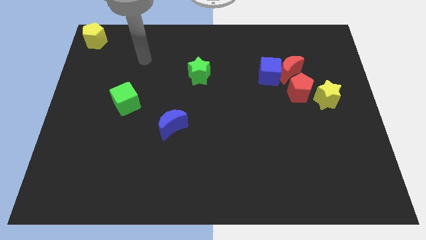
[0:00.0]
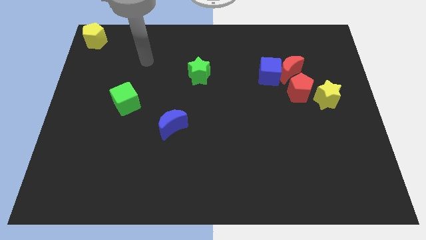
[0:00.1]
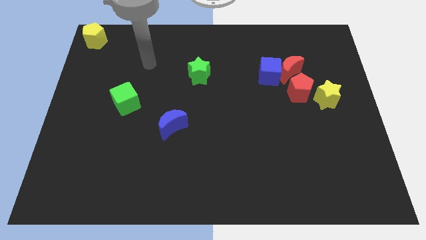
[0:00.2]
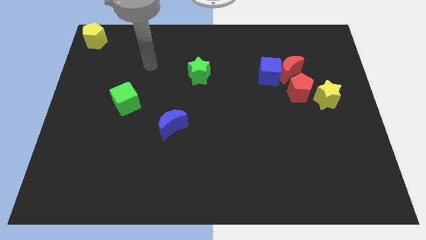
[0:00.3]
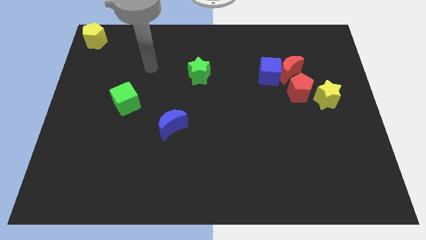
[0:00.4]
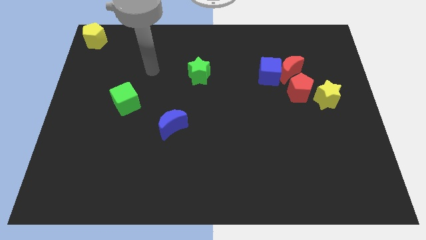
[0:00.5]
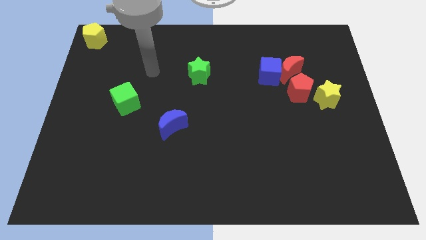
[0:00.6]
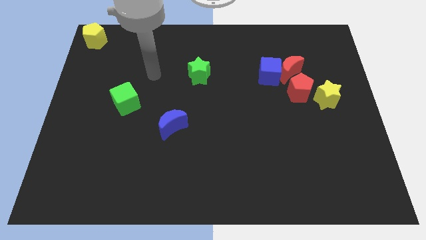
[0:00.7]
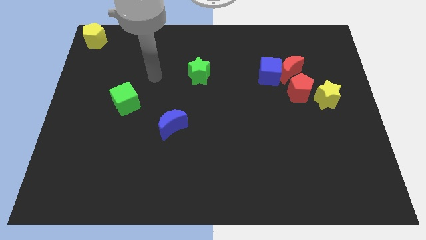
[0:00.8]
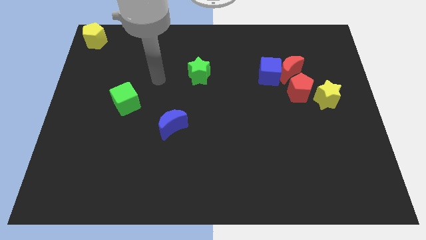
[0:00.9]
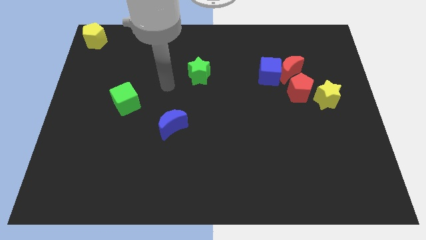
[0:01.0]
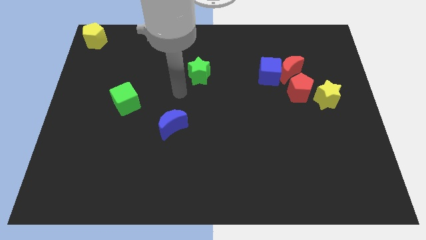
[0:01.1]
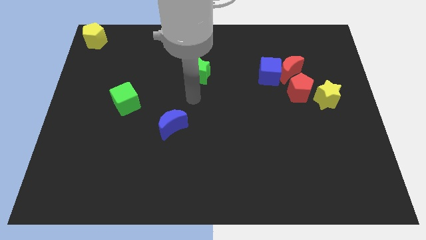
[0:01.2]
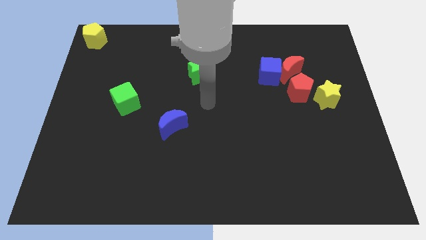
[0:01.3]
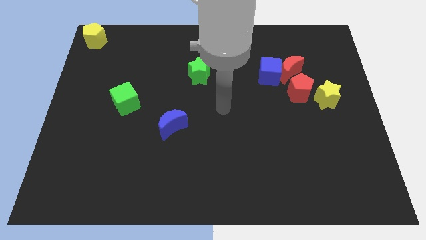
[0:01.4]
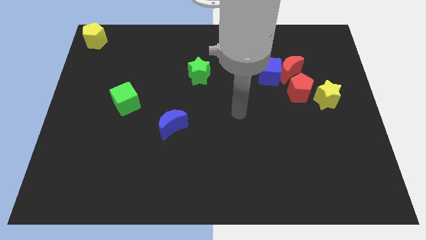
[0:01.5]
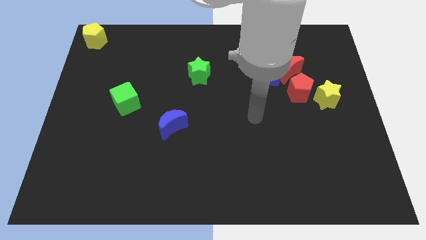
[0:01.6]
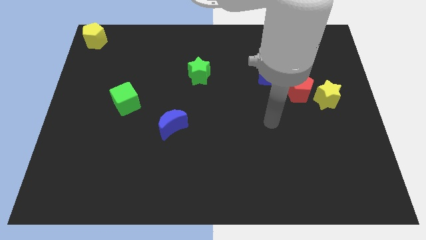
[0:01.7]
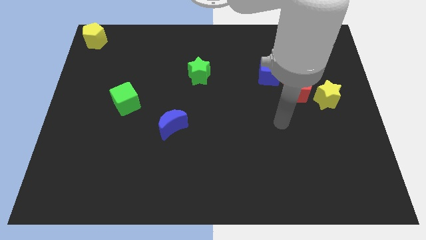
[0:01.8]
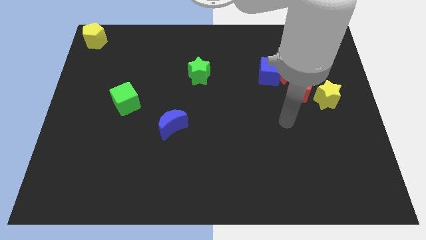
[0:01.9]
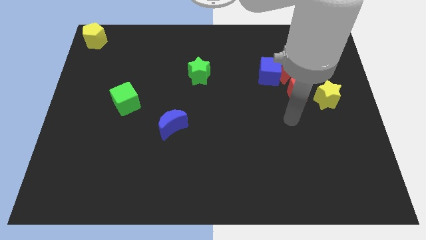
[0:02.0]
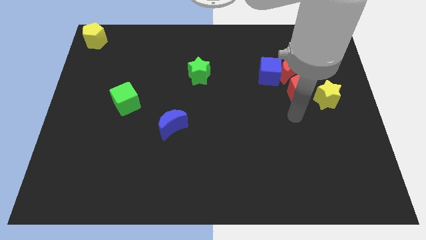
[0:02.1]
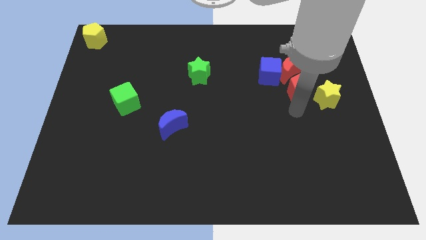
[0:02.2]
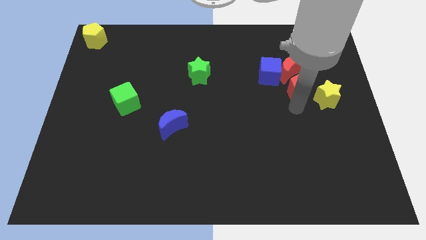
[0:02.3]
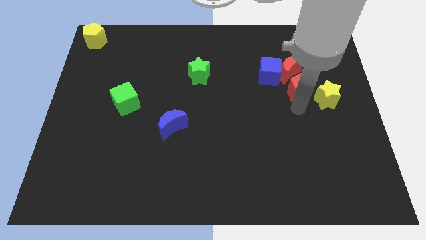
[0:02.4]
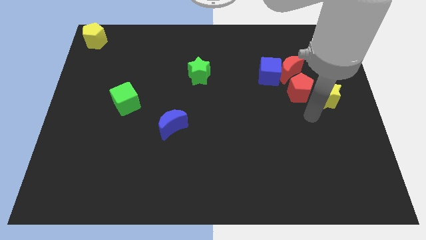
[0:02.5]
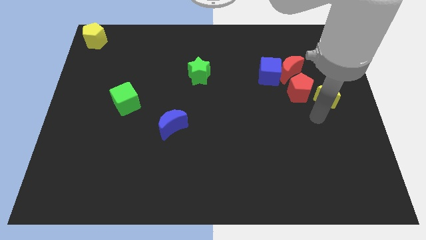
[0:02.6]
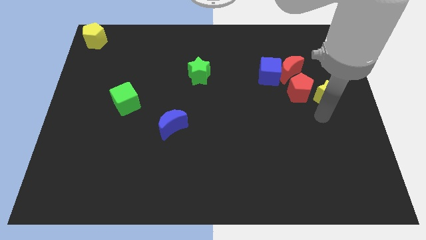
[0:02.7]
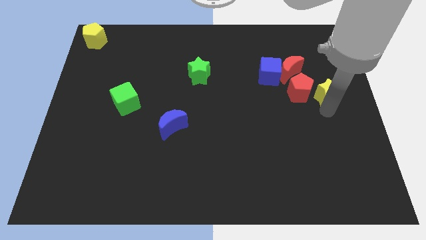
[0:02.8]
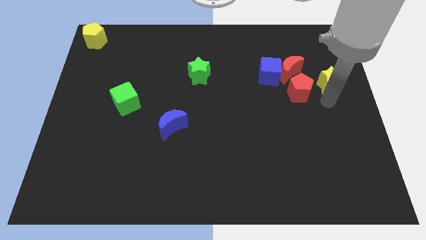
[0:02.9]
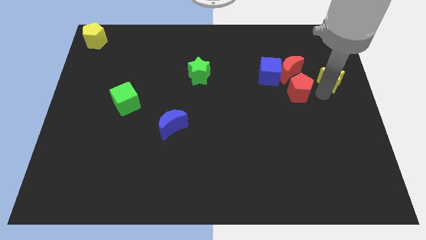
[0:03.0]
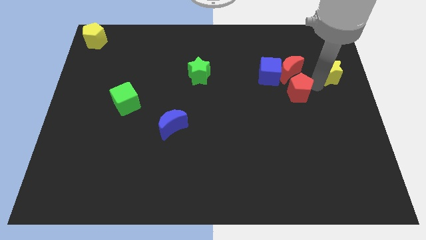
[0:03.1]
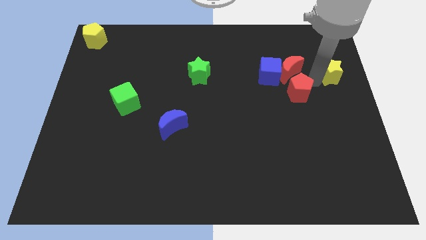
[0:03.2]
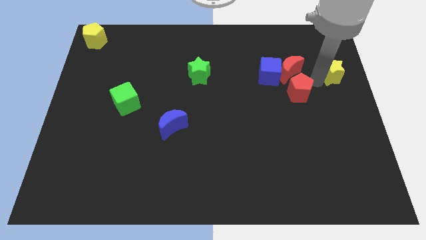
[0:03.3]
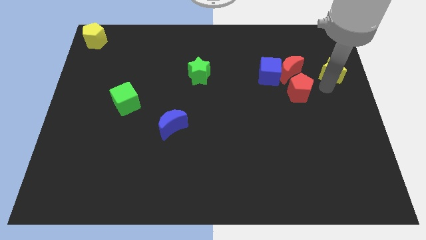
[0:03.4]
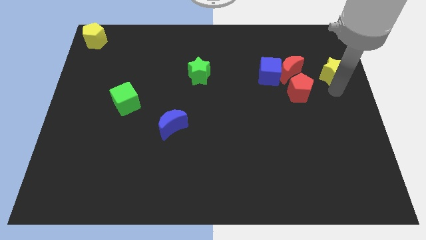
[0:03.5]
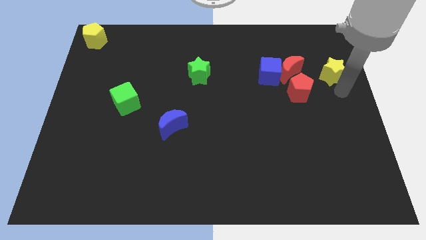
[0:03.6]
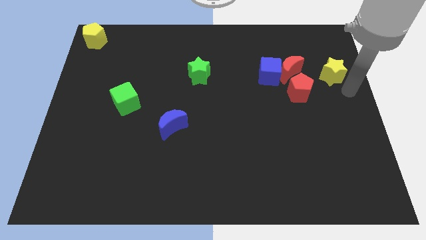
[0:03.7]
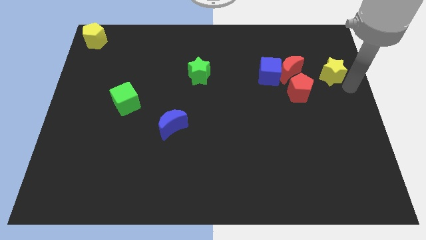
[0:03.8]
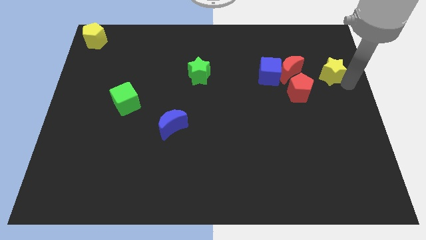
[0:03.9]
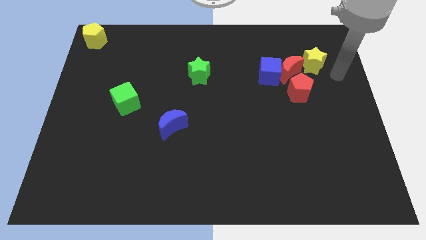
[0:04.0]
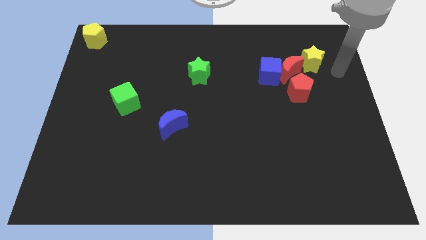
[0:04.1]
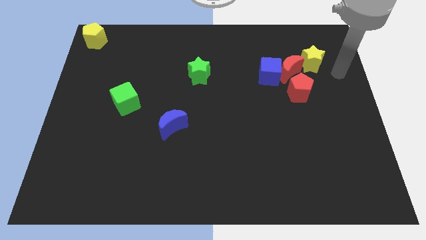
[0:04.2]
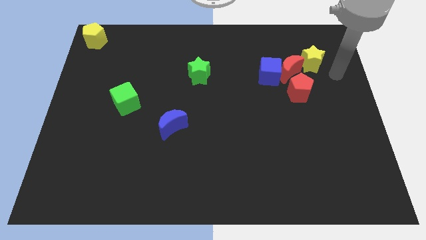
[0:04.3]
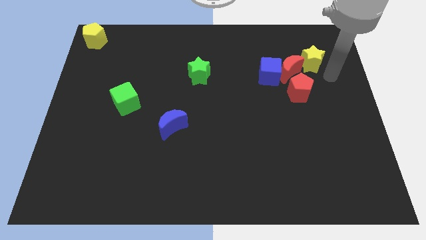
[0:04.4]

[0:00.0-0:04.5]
push the yellow star slightly upward

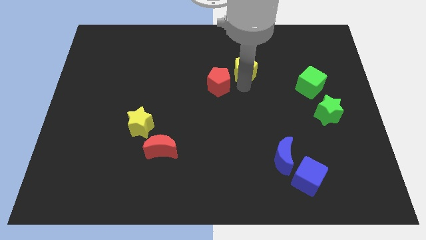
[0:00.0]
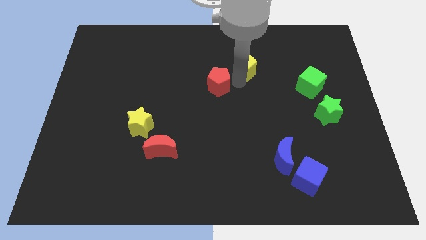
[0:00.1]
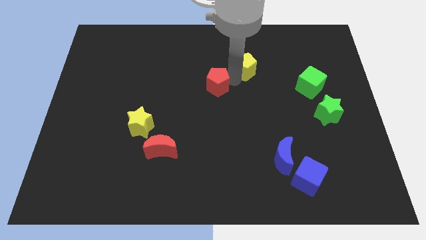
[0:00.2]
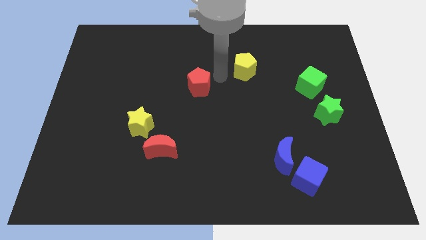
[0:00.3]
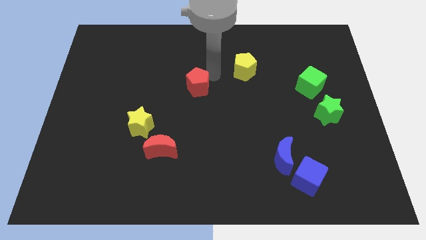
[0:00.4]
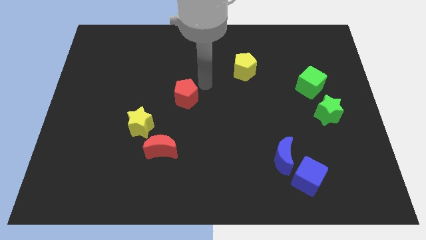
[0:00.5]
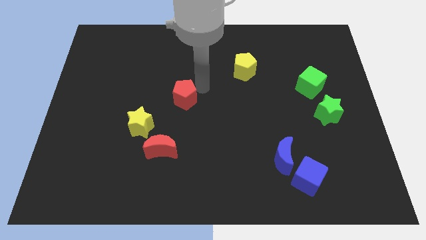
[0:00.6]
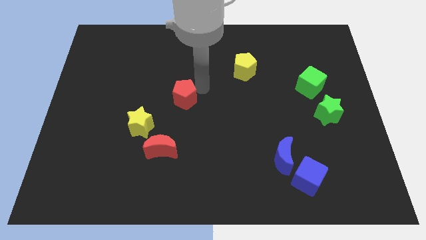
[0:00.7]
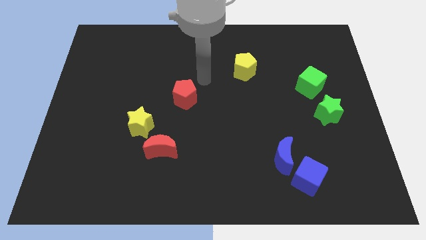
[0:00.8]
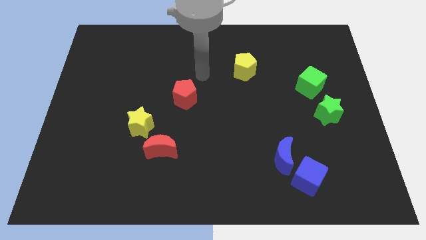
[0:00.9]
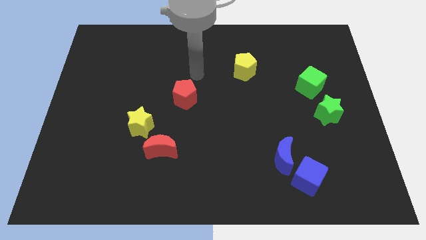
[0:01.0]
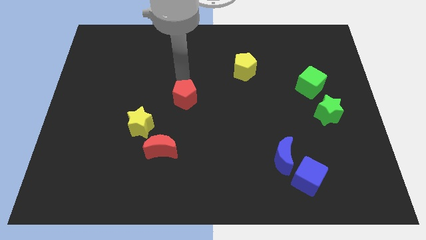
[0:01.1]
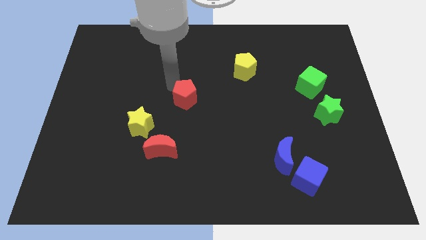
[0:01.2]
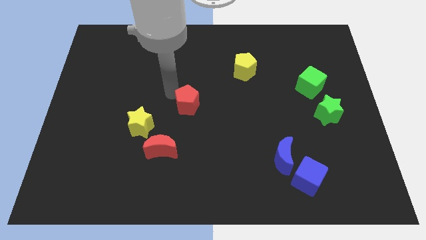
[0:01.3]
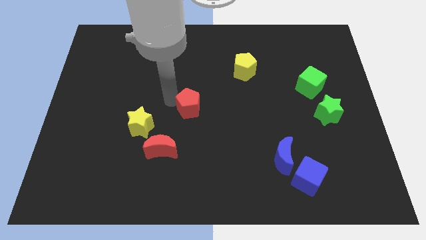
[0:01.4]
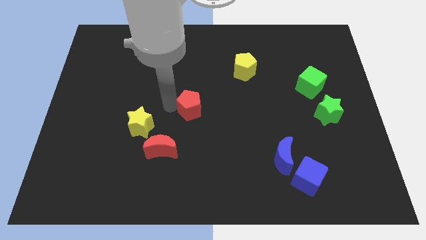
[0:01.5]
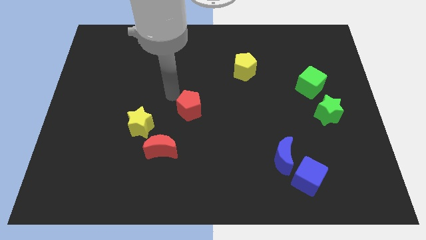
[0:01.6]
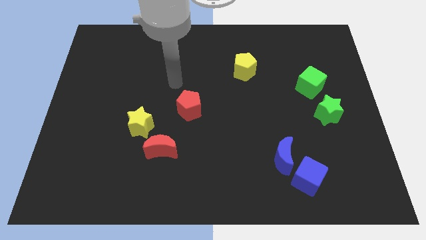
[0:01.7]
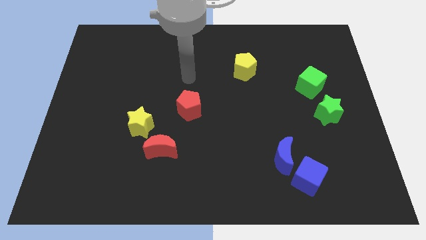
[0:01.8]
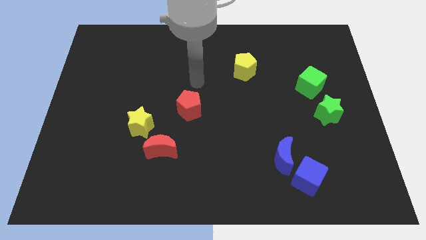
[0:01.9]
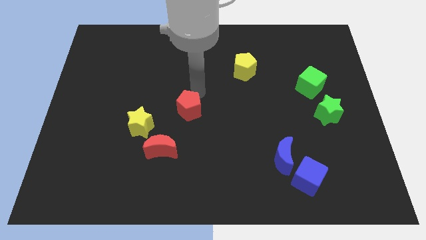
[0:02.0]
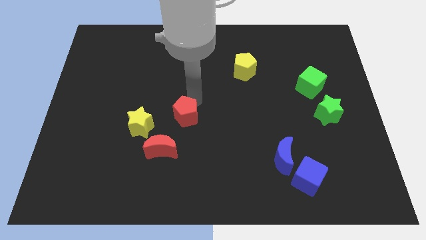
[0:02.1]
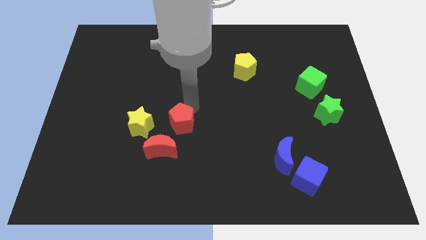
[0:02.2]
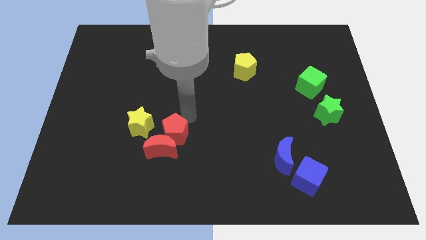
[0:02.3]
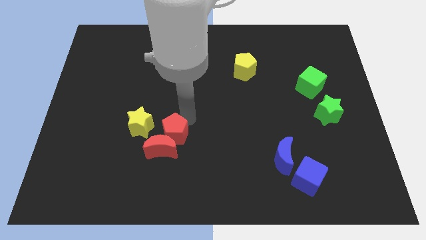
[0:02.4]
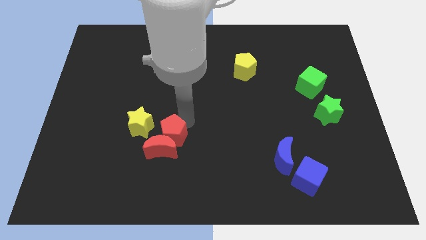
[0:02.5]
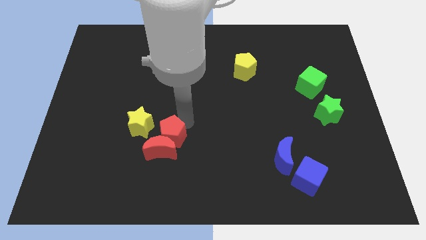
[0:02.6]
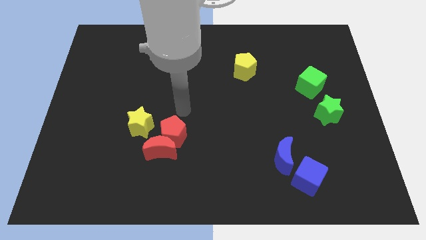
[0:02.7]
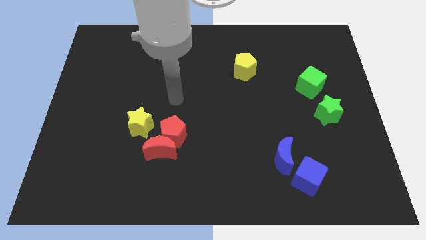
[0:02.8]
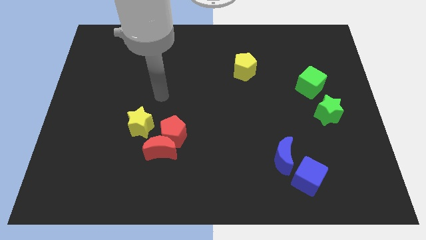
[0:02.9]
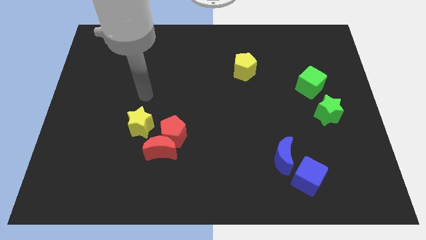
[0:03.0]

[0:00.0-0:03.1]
place the red pentagon to the top of the red crescent

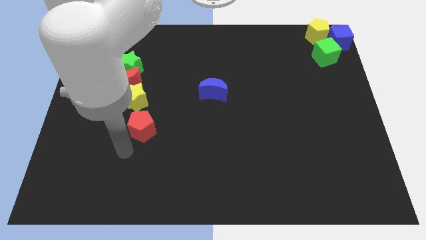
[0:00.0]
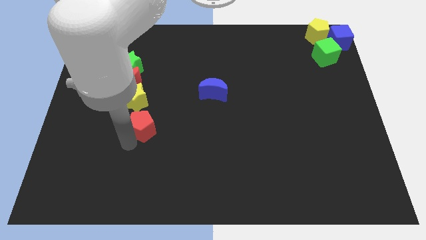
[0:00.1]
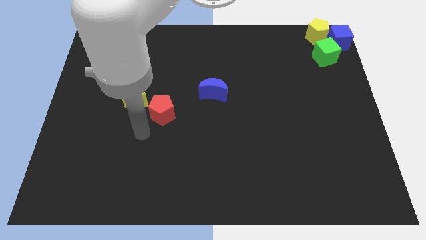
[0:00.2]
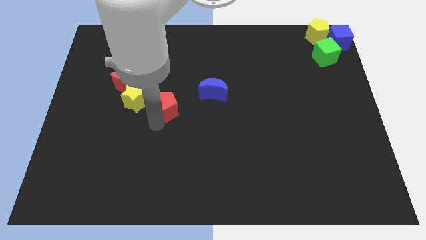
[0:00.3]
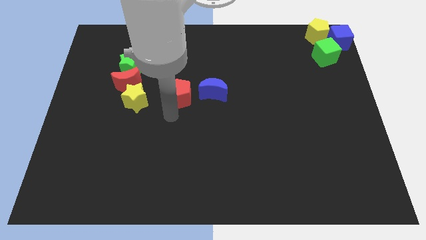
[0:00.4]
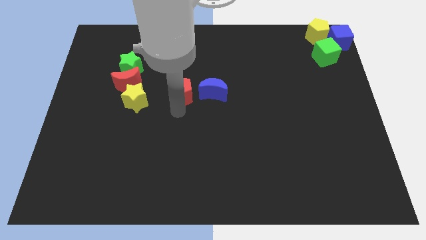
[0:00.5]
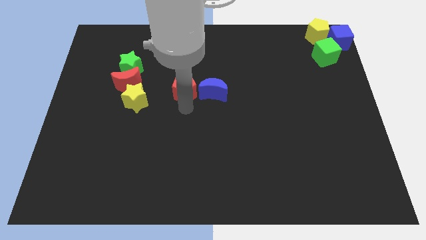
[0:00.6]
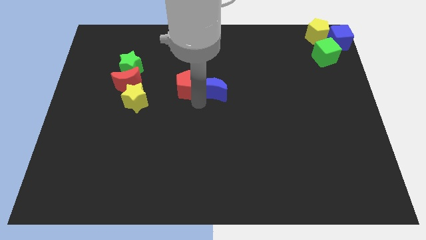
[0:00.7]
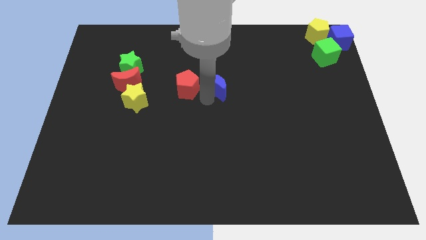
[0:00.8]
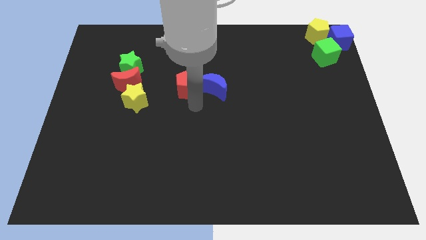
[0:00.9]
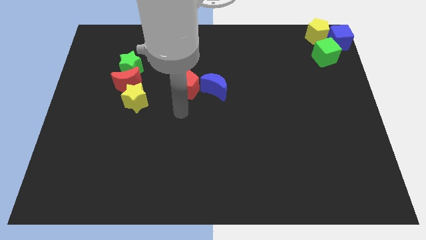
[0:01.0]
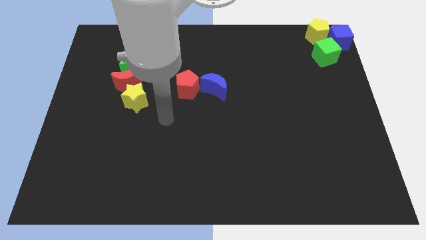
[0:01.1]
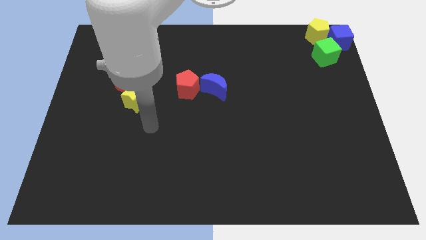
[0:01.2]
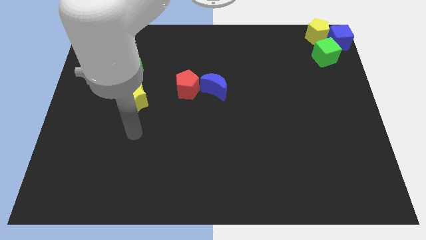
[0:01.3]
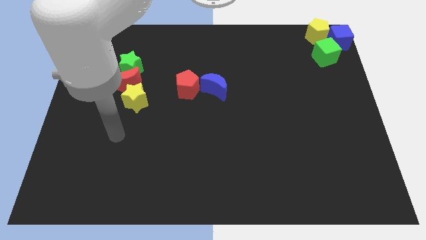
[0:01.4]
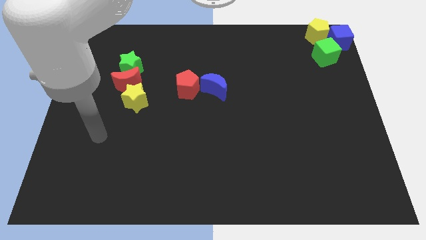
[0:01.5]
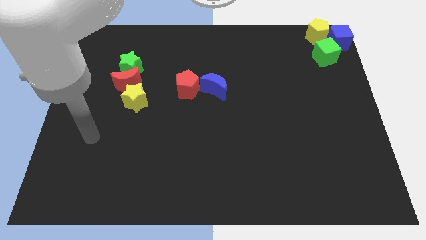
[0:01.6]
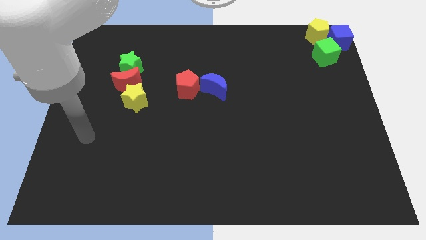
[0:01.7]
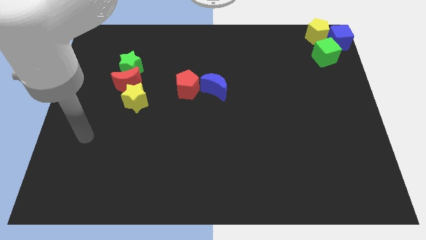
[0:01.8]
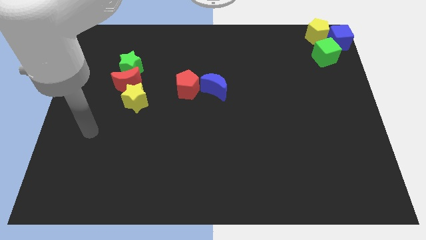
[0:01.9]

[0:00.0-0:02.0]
place the red pentagon to the left of the blue moon
